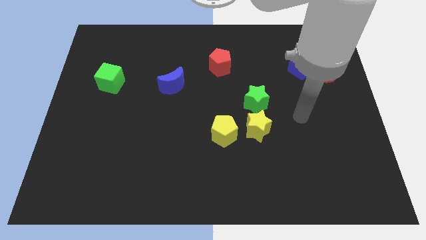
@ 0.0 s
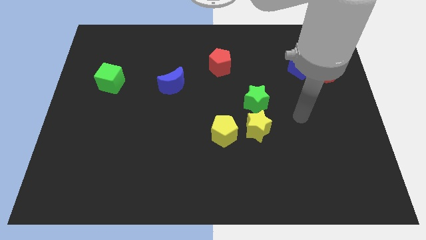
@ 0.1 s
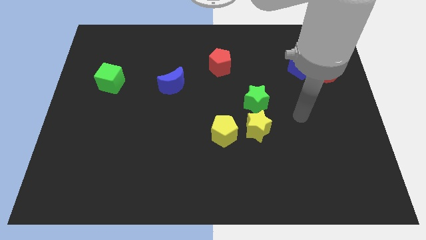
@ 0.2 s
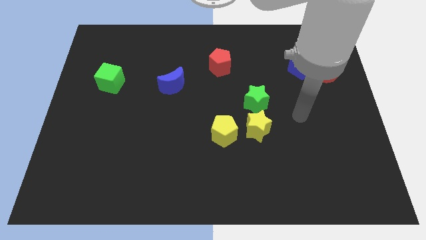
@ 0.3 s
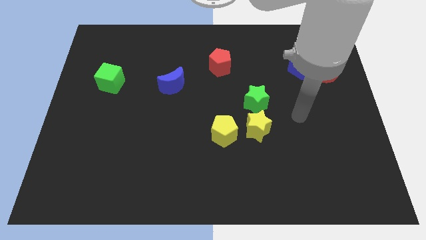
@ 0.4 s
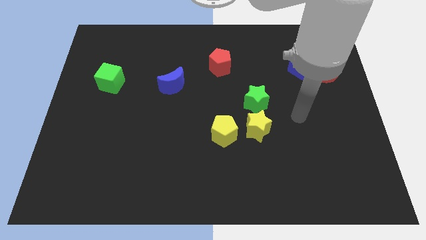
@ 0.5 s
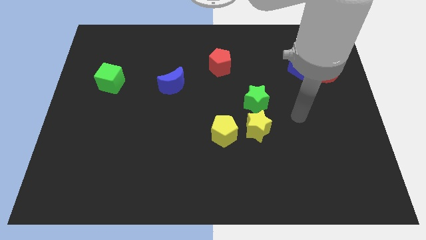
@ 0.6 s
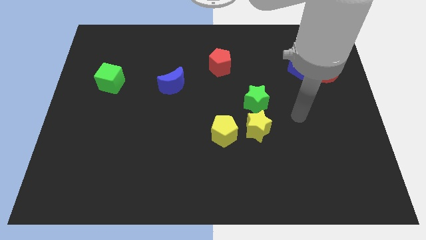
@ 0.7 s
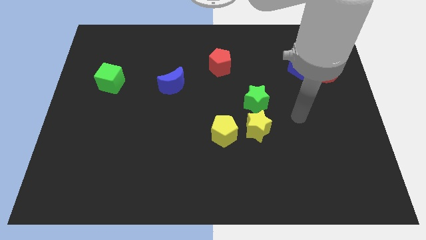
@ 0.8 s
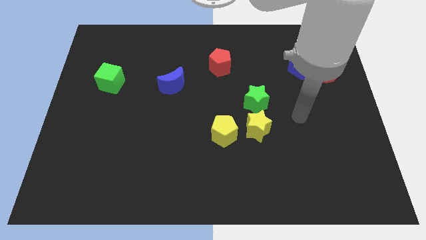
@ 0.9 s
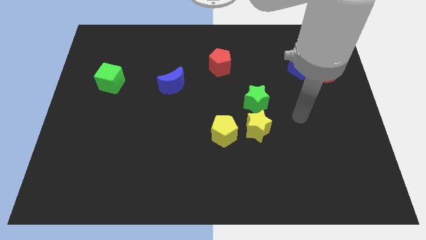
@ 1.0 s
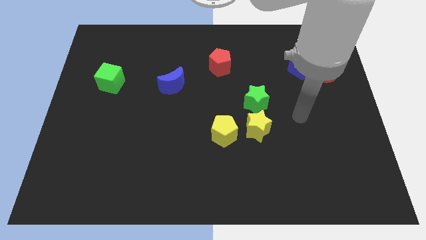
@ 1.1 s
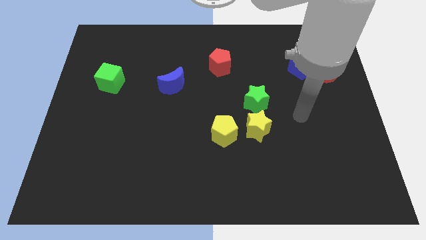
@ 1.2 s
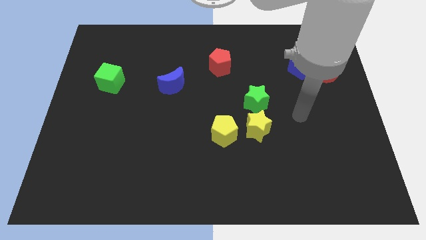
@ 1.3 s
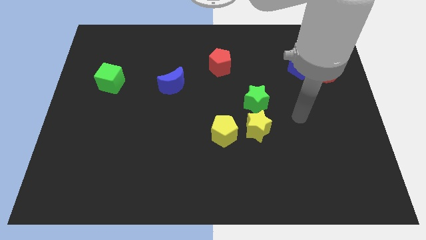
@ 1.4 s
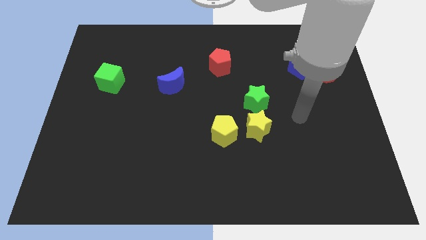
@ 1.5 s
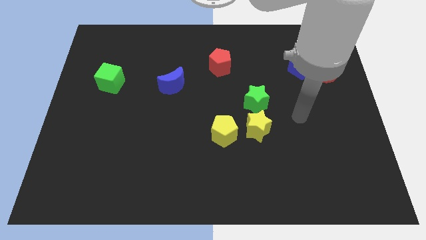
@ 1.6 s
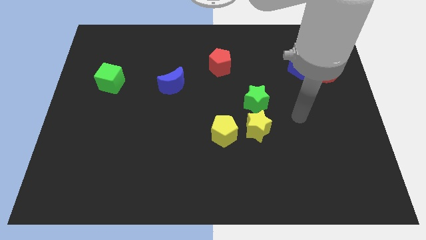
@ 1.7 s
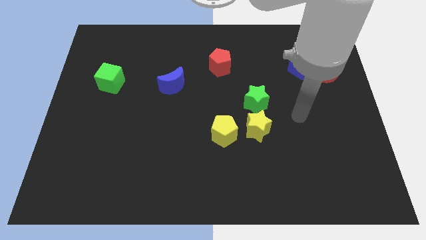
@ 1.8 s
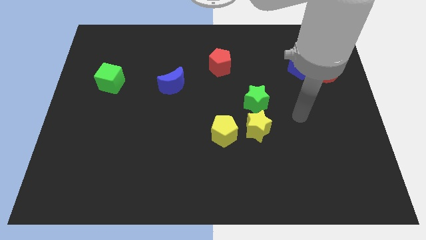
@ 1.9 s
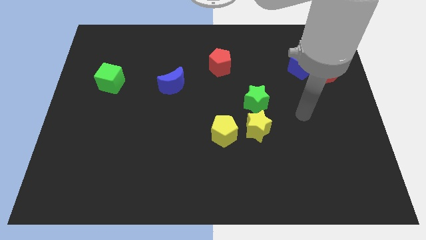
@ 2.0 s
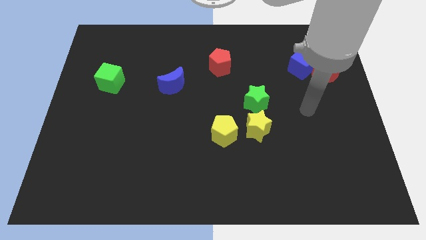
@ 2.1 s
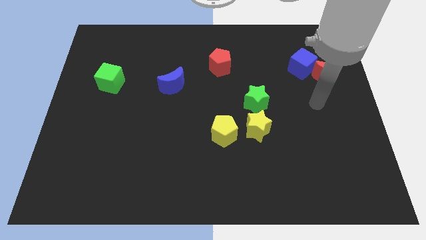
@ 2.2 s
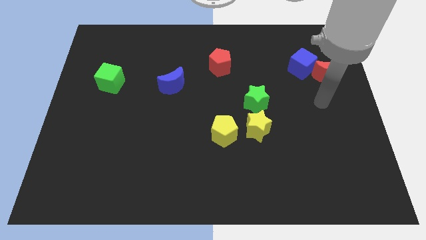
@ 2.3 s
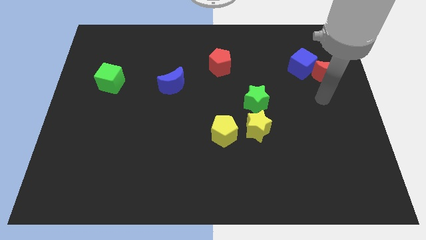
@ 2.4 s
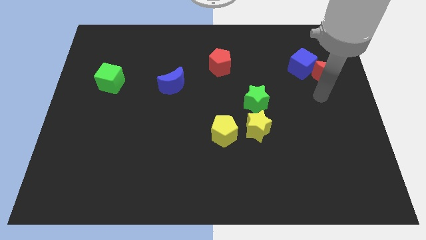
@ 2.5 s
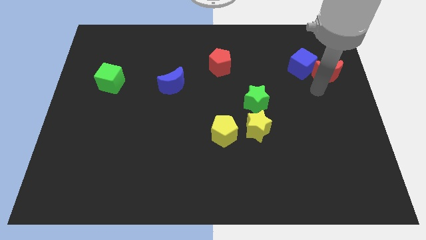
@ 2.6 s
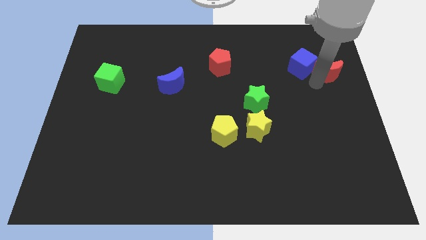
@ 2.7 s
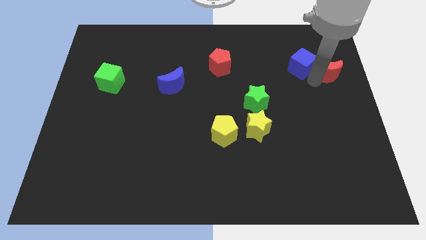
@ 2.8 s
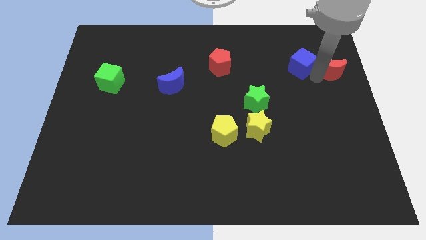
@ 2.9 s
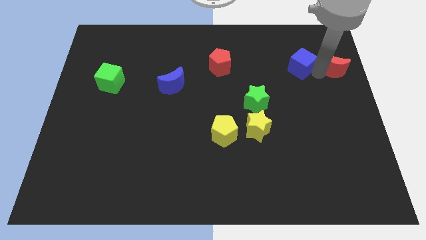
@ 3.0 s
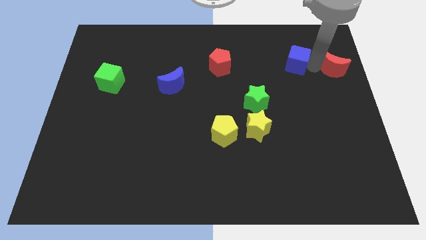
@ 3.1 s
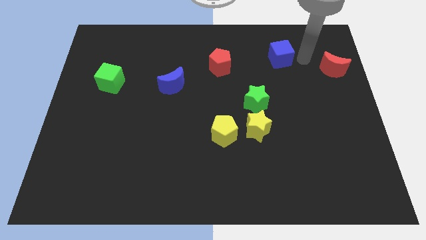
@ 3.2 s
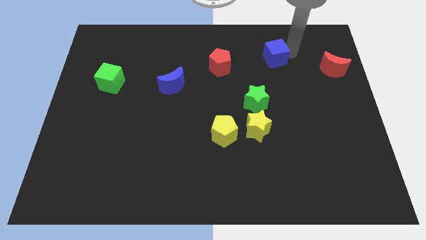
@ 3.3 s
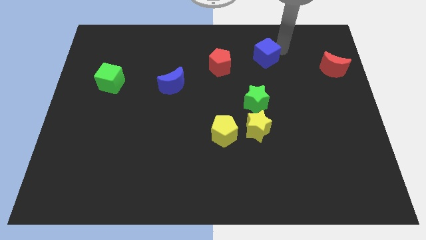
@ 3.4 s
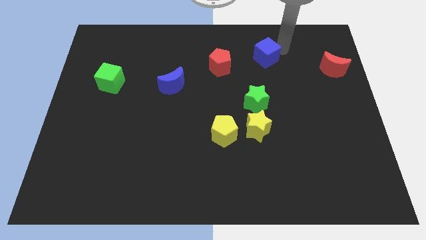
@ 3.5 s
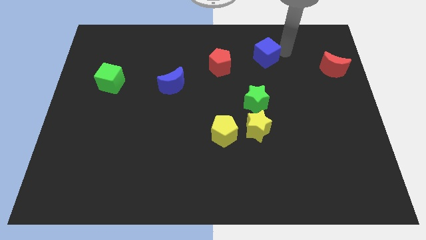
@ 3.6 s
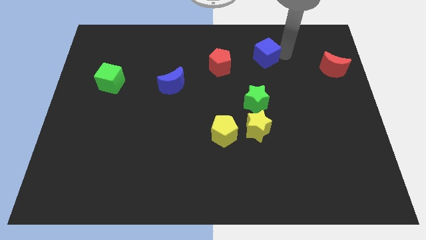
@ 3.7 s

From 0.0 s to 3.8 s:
separate the blue cube from the red crescent

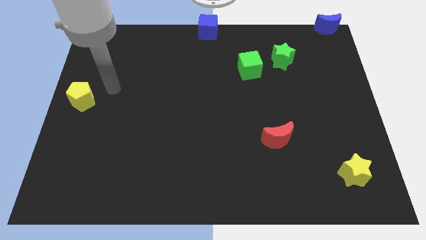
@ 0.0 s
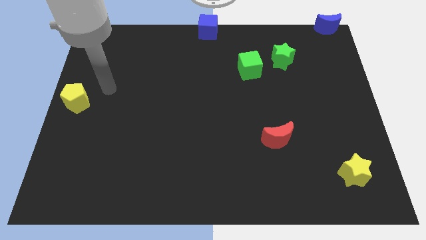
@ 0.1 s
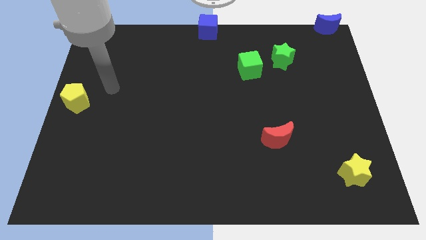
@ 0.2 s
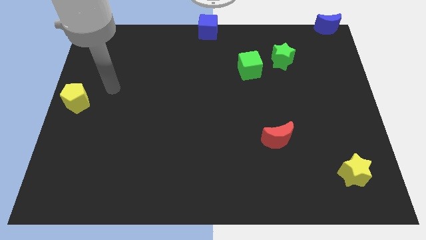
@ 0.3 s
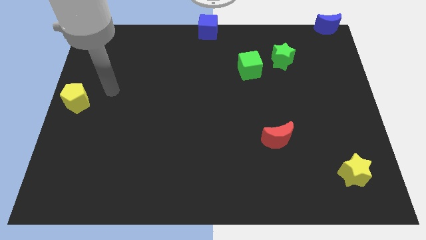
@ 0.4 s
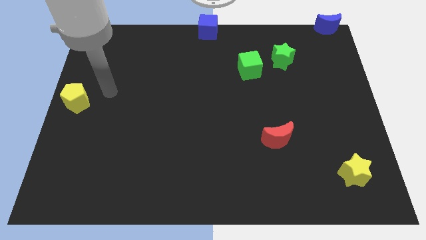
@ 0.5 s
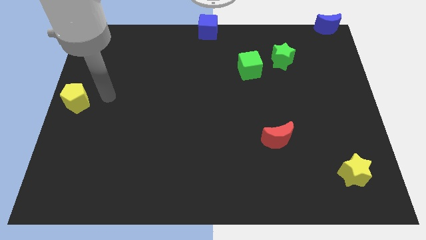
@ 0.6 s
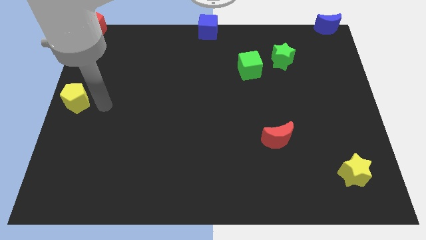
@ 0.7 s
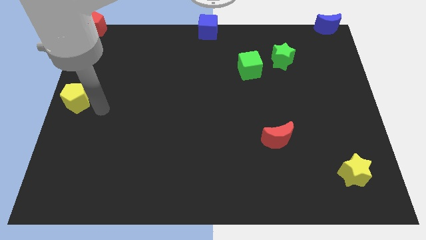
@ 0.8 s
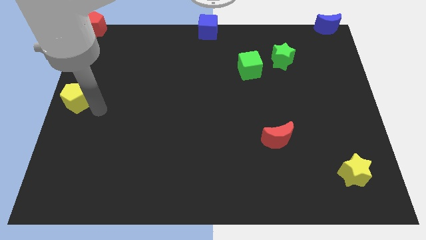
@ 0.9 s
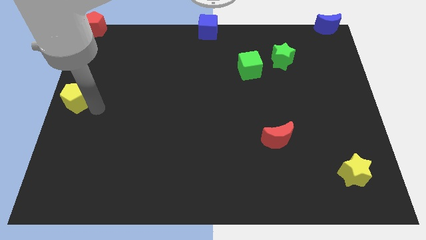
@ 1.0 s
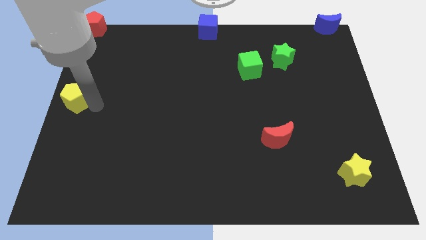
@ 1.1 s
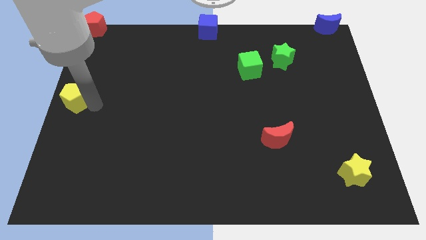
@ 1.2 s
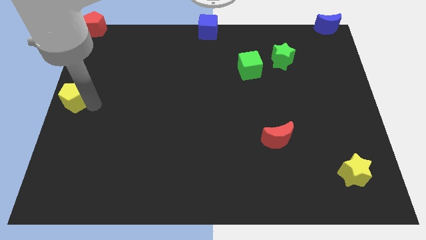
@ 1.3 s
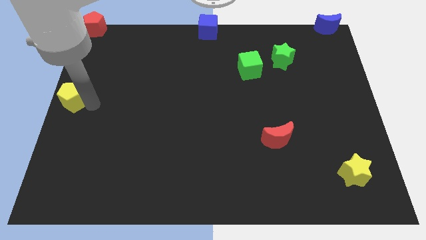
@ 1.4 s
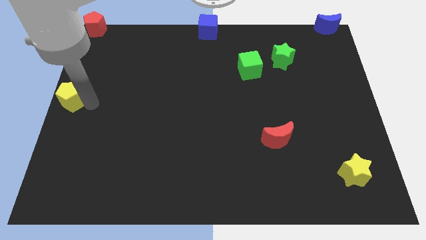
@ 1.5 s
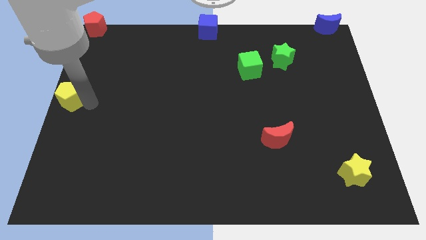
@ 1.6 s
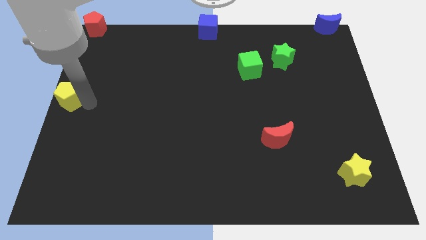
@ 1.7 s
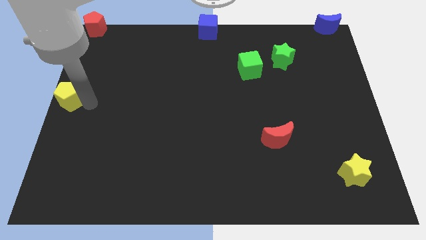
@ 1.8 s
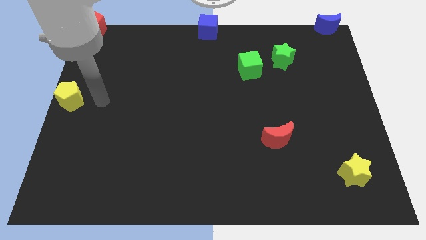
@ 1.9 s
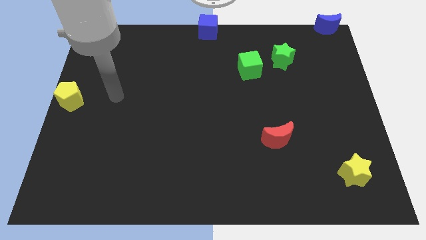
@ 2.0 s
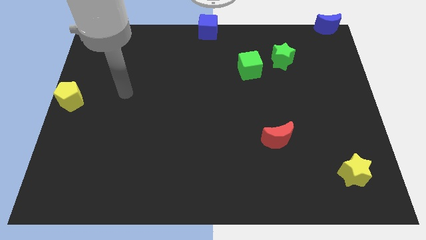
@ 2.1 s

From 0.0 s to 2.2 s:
place the yellow pentagon on the center left of the board

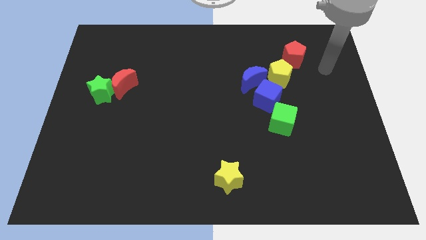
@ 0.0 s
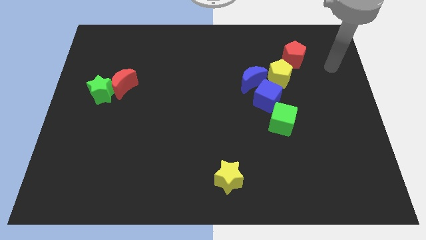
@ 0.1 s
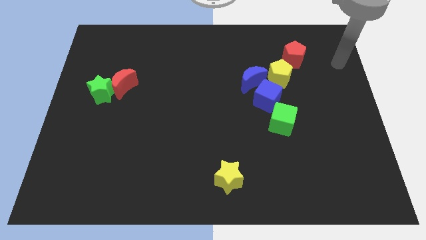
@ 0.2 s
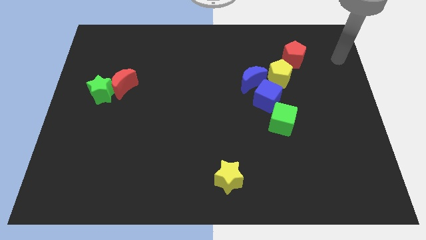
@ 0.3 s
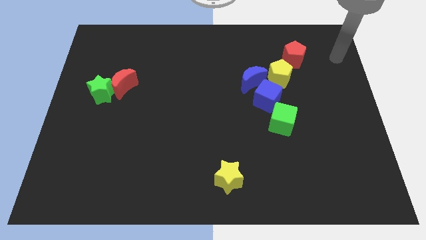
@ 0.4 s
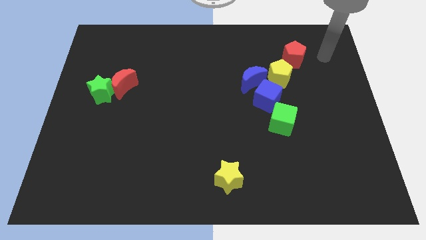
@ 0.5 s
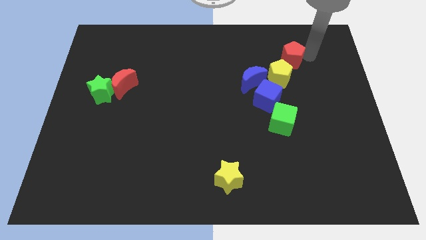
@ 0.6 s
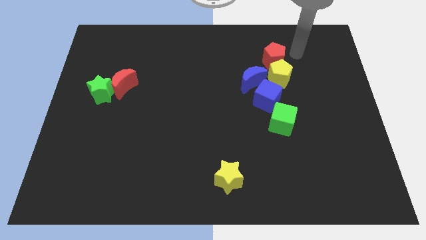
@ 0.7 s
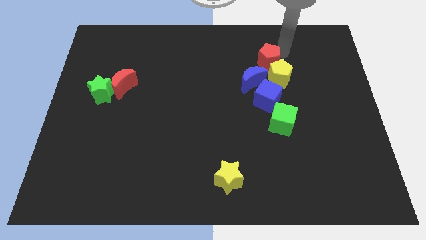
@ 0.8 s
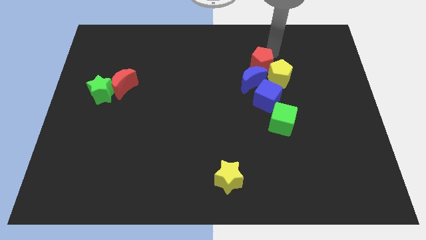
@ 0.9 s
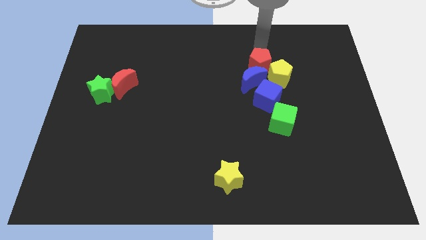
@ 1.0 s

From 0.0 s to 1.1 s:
push the red pentagon to the top of the blue crescent

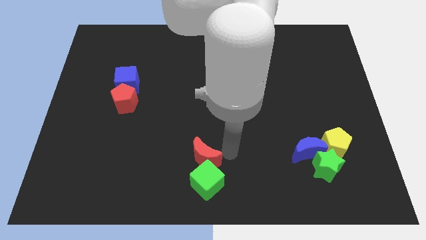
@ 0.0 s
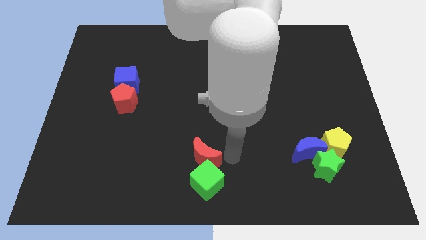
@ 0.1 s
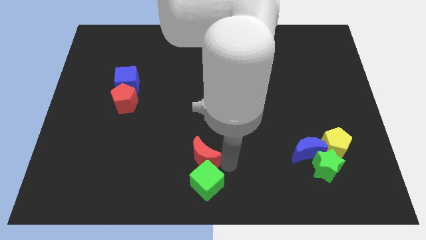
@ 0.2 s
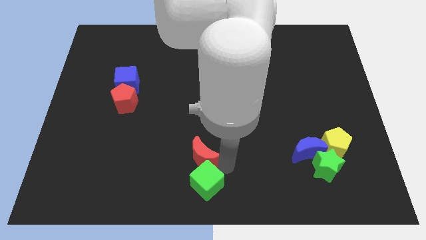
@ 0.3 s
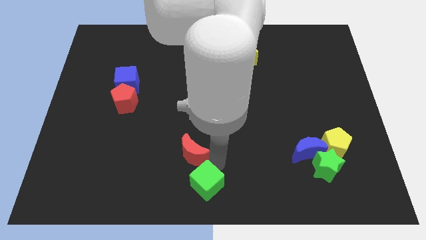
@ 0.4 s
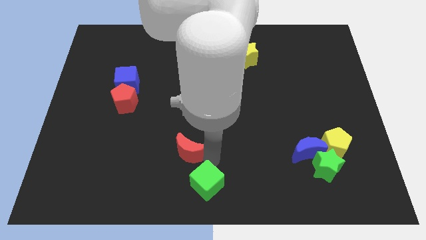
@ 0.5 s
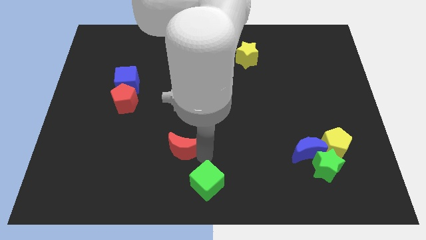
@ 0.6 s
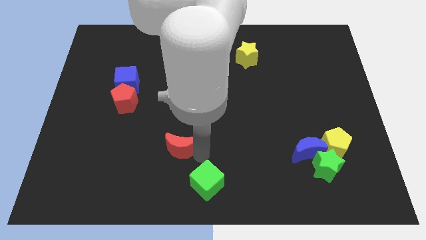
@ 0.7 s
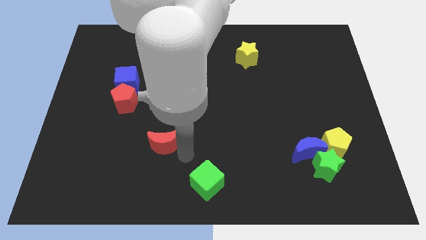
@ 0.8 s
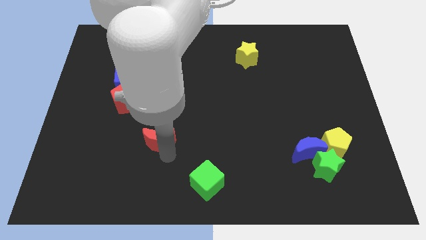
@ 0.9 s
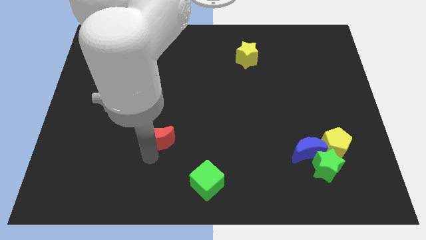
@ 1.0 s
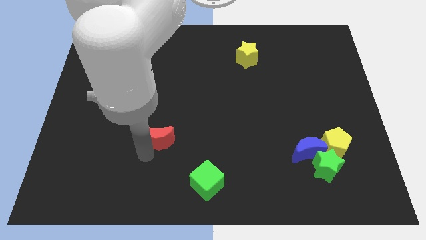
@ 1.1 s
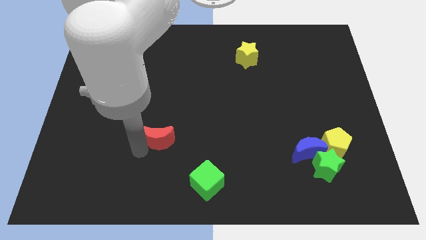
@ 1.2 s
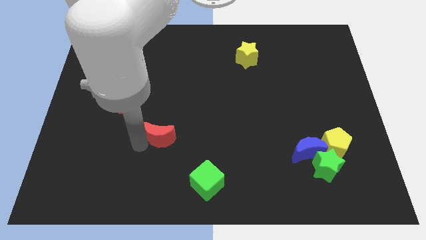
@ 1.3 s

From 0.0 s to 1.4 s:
separate the red moon from the green cube

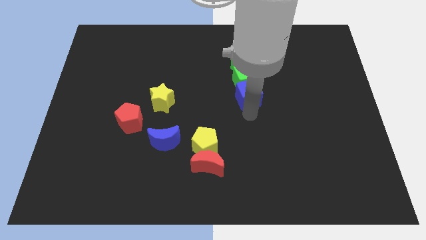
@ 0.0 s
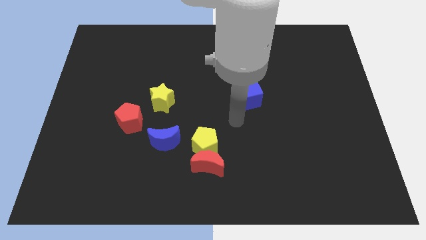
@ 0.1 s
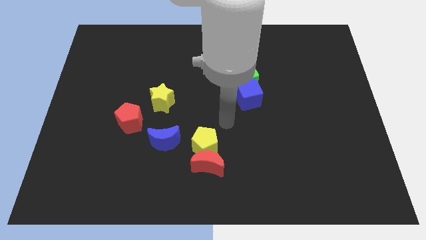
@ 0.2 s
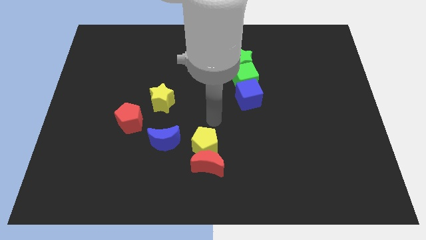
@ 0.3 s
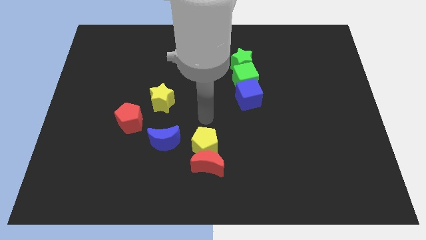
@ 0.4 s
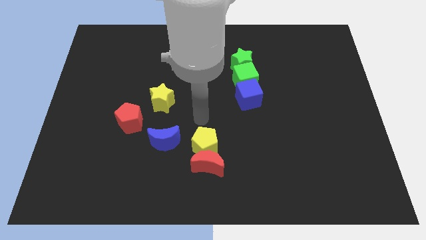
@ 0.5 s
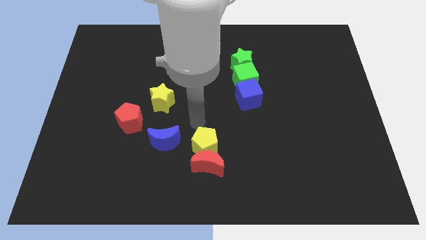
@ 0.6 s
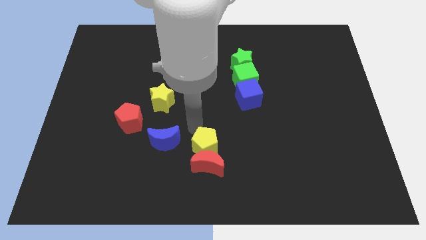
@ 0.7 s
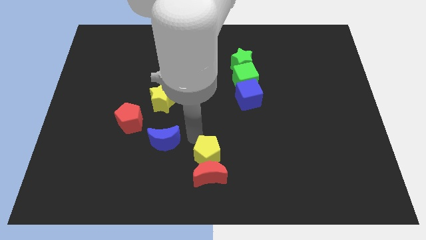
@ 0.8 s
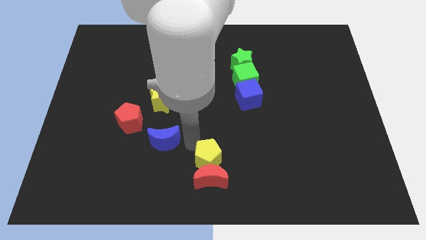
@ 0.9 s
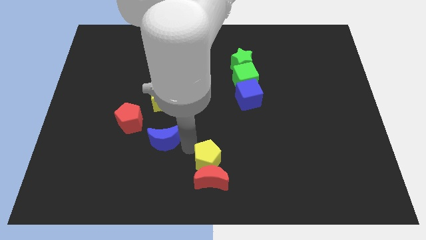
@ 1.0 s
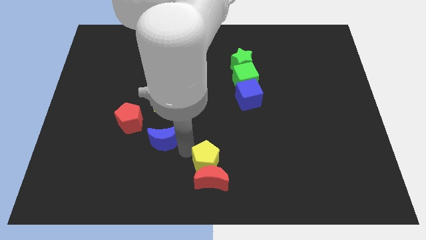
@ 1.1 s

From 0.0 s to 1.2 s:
move slightly the yellow pwntagon and red moon downwards
